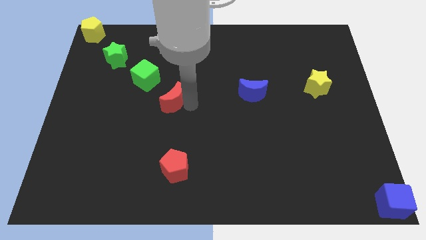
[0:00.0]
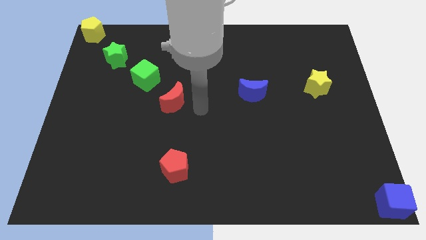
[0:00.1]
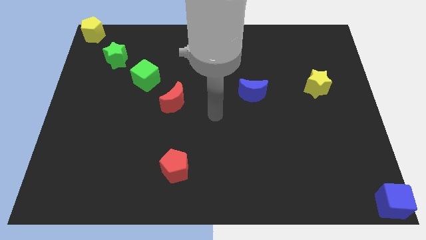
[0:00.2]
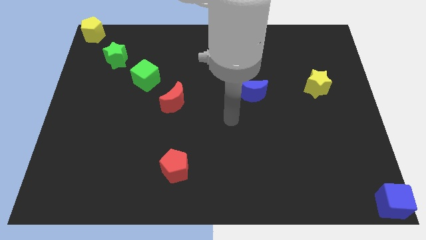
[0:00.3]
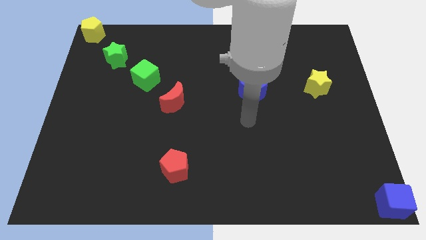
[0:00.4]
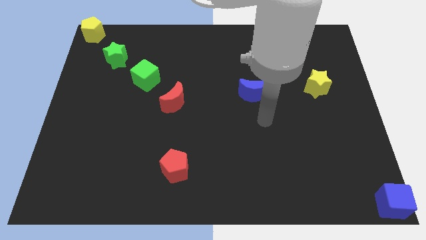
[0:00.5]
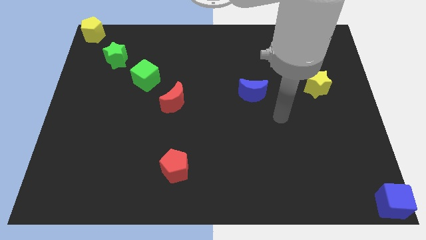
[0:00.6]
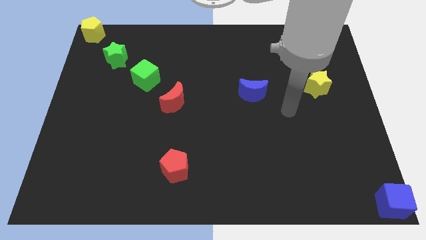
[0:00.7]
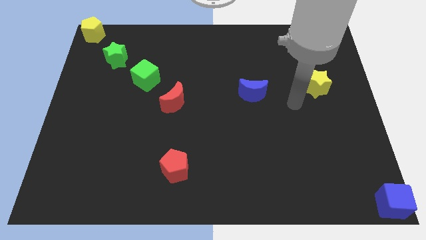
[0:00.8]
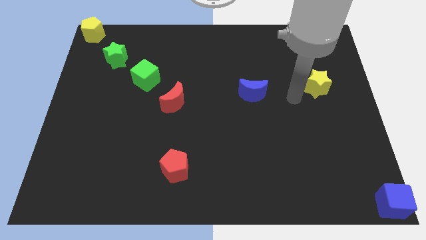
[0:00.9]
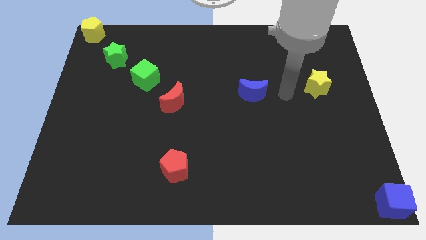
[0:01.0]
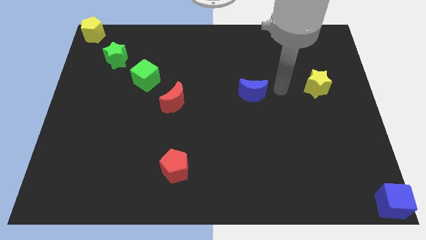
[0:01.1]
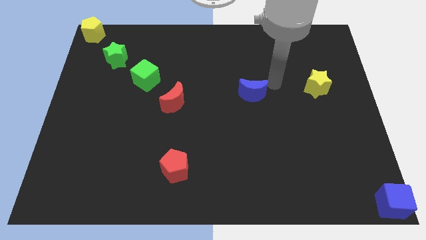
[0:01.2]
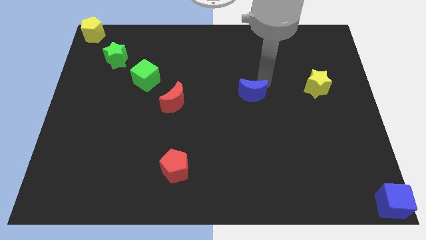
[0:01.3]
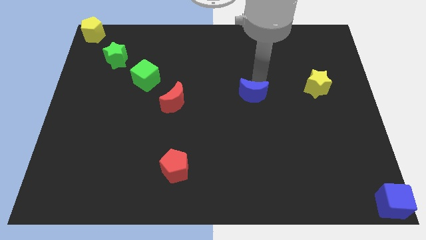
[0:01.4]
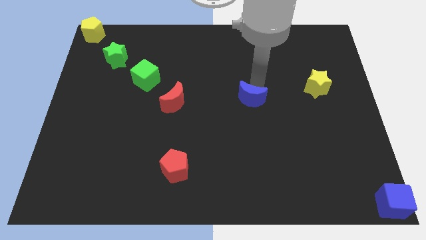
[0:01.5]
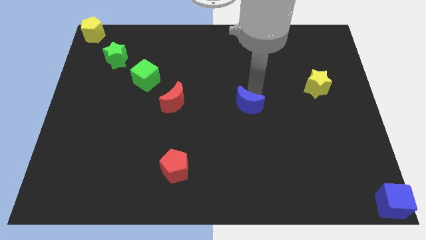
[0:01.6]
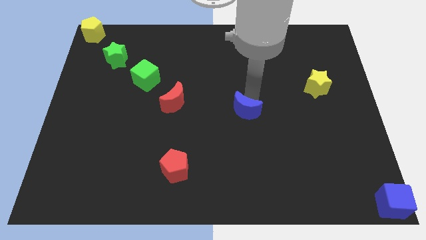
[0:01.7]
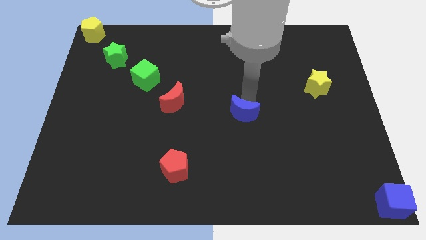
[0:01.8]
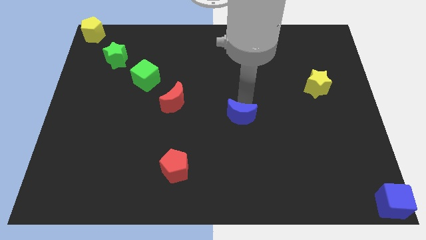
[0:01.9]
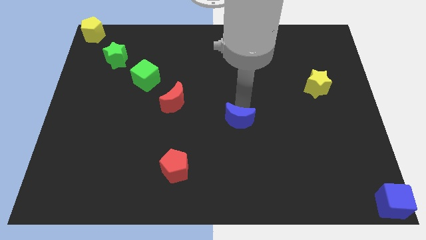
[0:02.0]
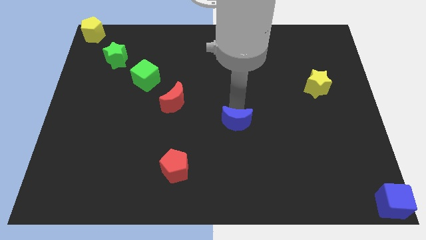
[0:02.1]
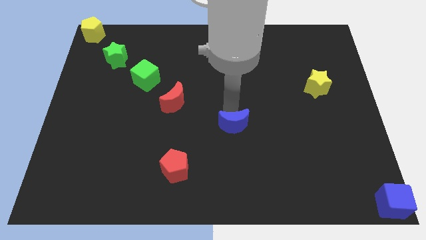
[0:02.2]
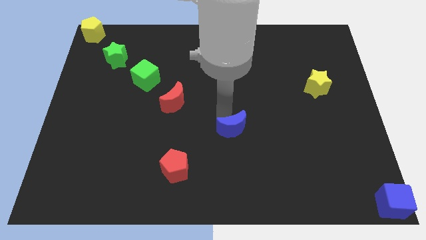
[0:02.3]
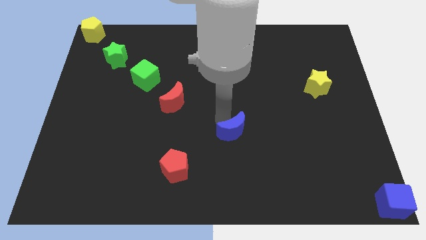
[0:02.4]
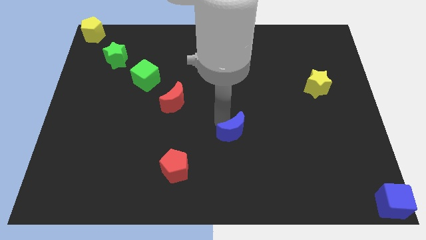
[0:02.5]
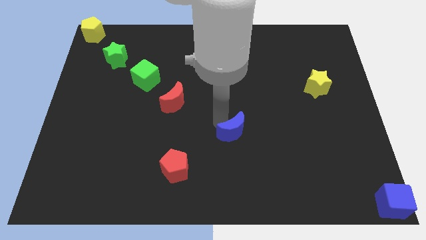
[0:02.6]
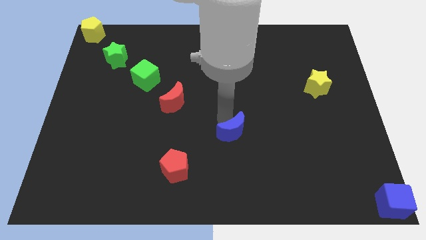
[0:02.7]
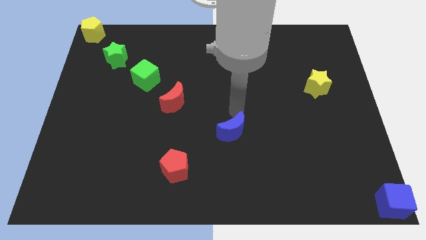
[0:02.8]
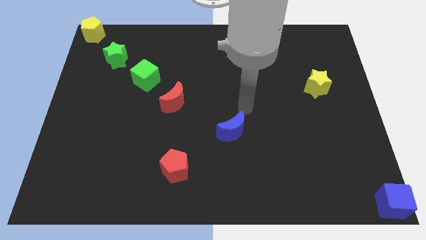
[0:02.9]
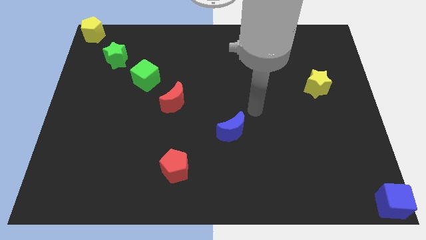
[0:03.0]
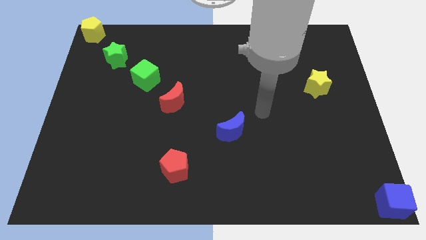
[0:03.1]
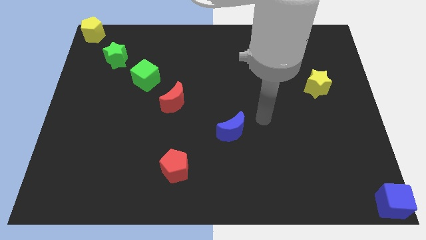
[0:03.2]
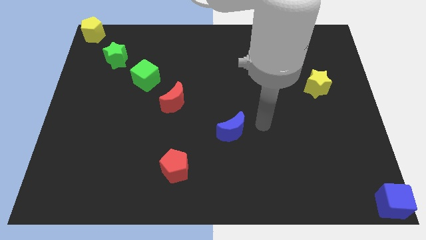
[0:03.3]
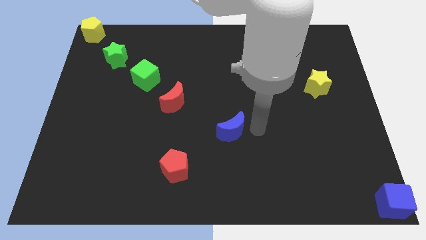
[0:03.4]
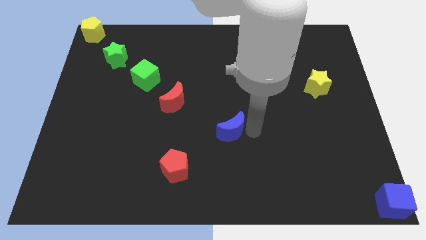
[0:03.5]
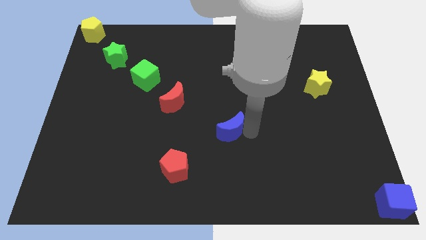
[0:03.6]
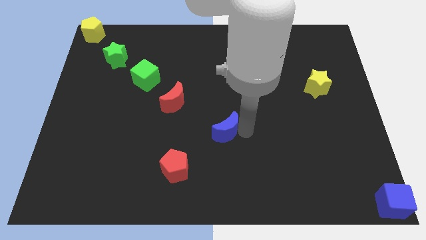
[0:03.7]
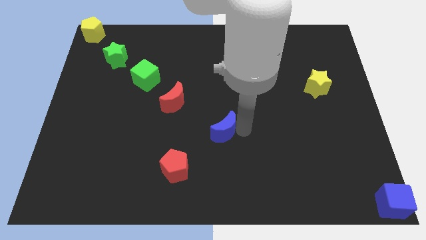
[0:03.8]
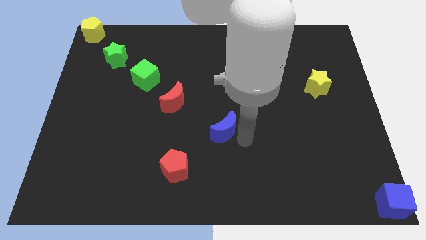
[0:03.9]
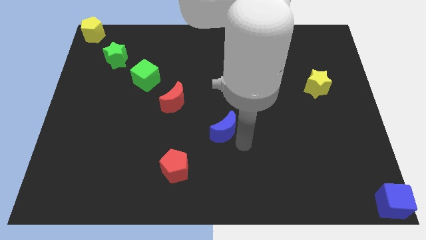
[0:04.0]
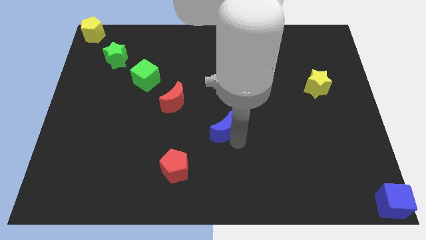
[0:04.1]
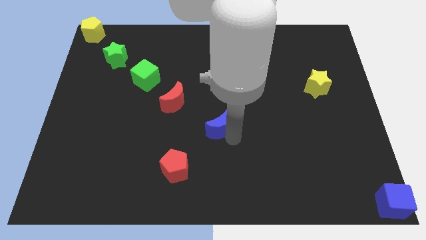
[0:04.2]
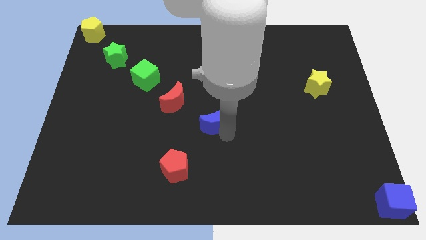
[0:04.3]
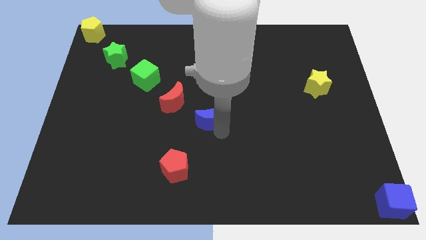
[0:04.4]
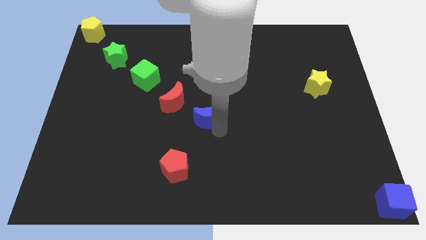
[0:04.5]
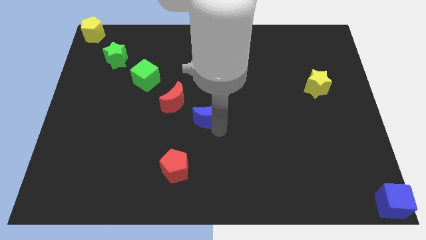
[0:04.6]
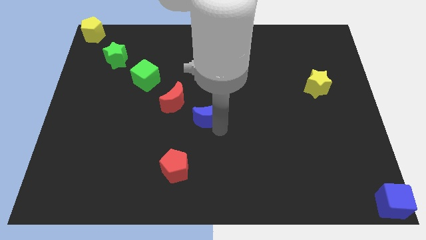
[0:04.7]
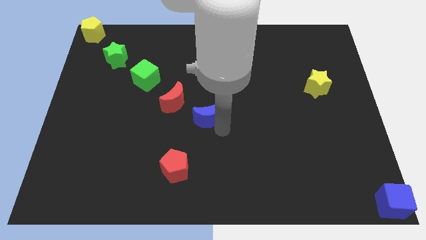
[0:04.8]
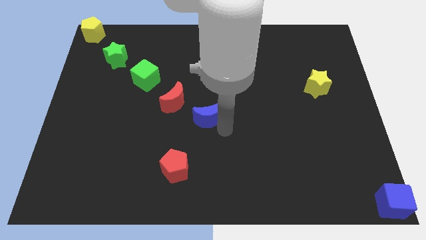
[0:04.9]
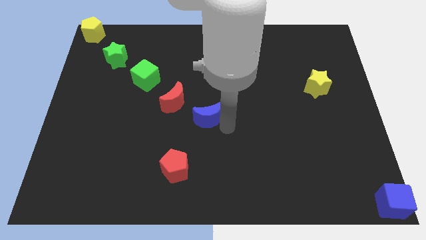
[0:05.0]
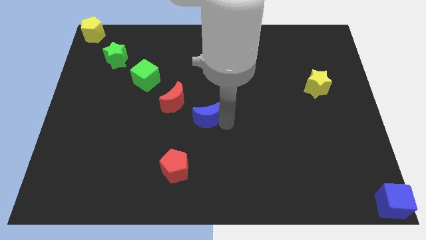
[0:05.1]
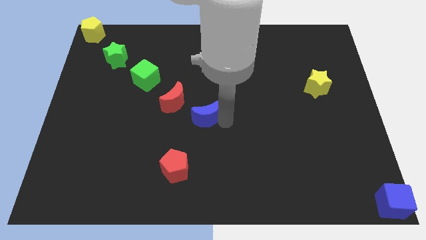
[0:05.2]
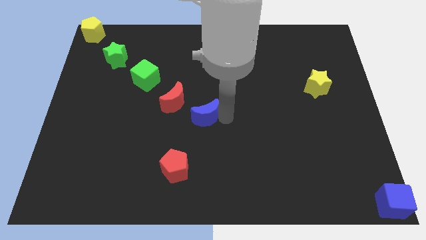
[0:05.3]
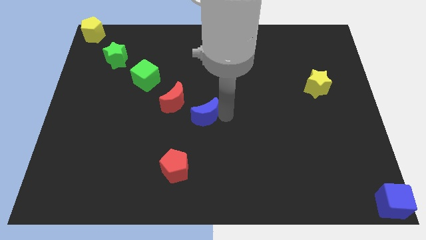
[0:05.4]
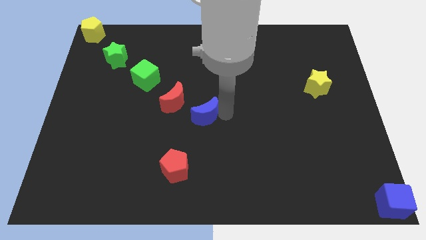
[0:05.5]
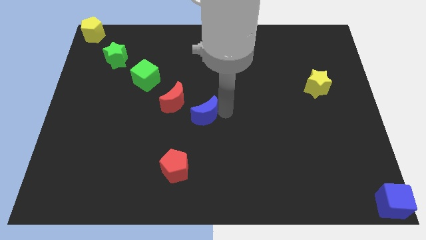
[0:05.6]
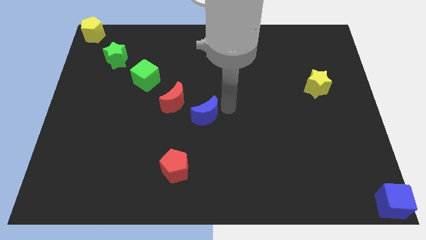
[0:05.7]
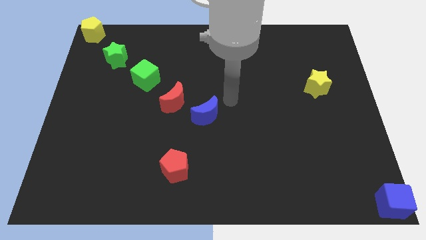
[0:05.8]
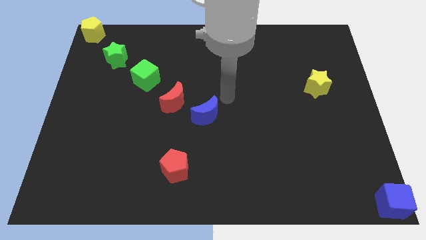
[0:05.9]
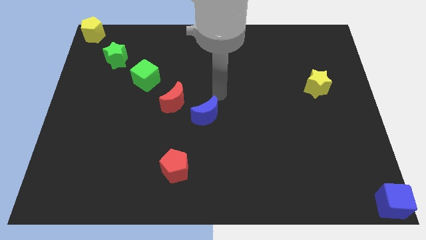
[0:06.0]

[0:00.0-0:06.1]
place blue moon right to red moon

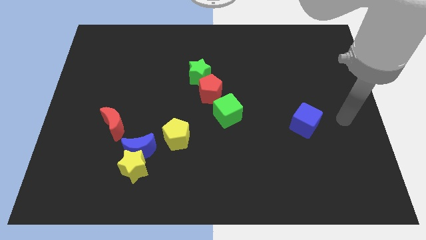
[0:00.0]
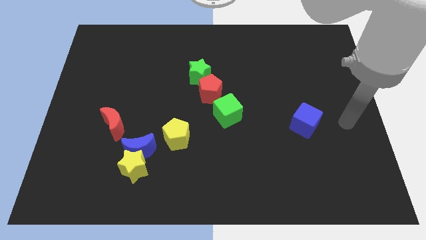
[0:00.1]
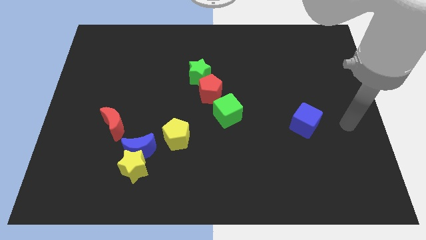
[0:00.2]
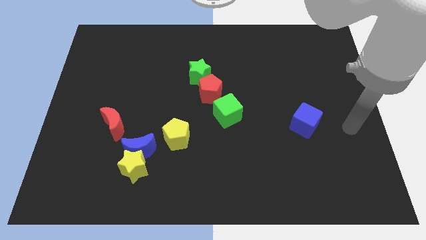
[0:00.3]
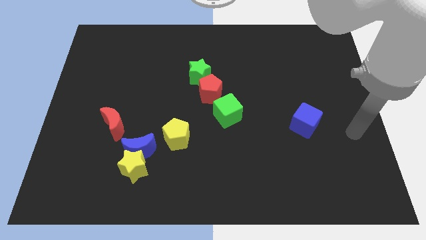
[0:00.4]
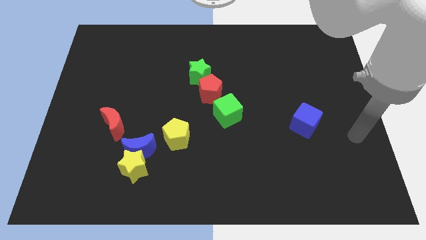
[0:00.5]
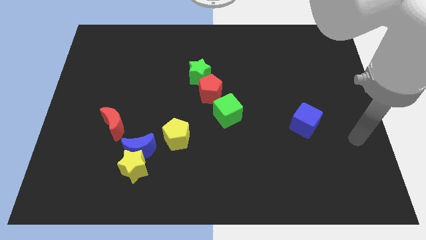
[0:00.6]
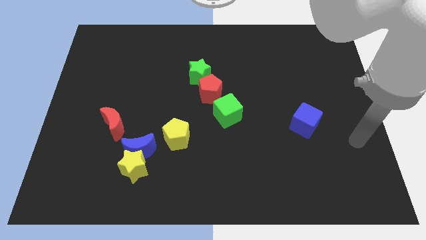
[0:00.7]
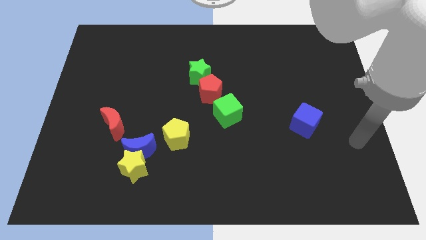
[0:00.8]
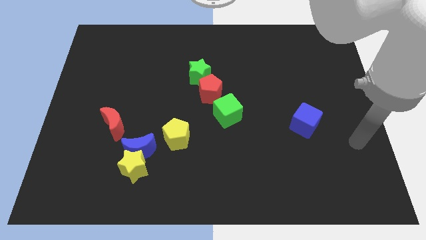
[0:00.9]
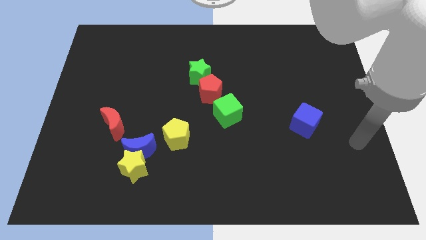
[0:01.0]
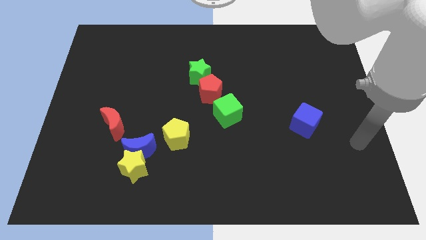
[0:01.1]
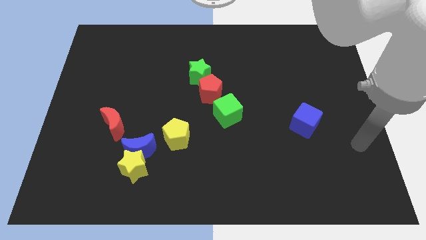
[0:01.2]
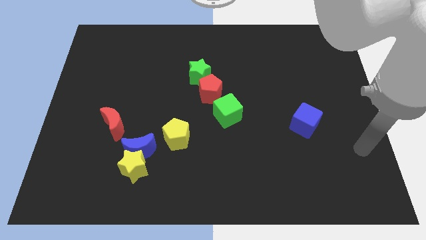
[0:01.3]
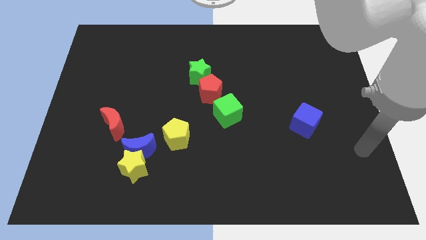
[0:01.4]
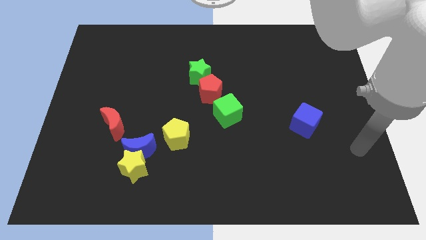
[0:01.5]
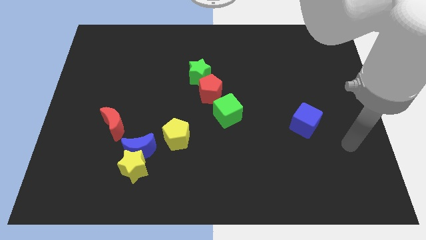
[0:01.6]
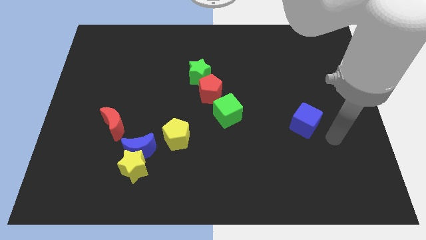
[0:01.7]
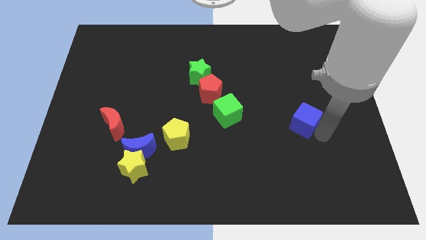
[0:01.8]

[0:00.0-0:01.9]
move your arm towards the blue cube

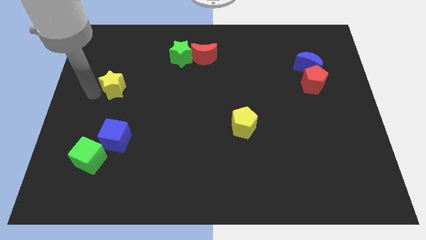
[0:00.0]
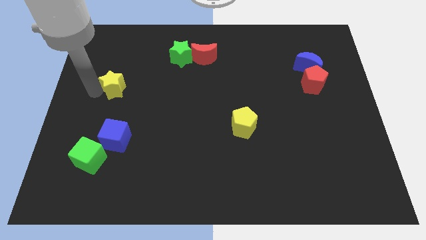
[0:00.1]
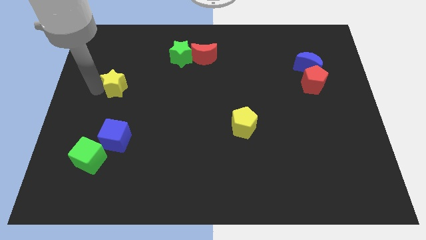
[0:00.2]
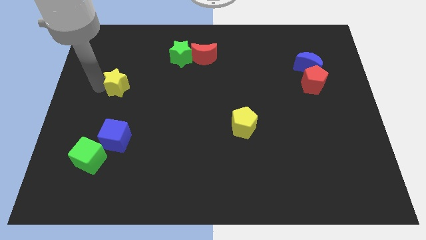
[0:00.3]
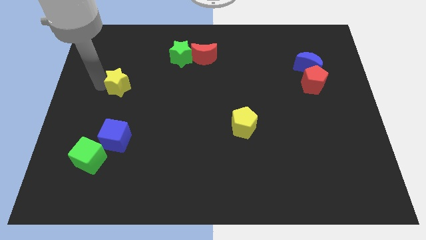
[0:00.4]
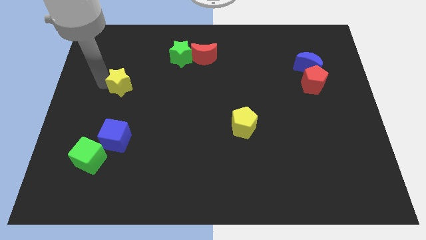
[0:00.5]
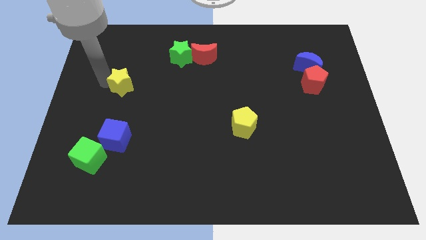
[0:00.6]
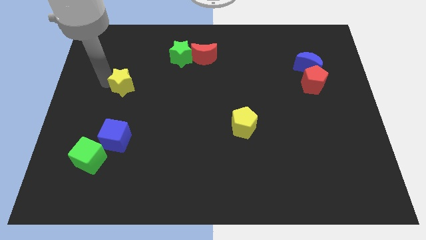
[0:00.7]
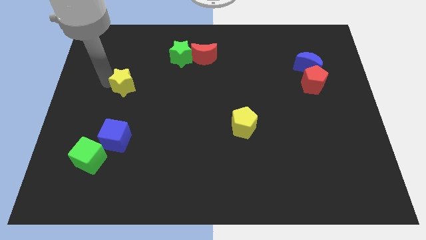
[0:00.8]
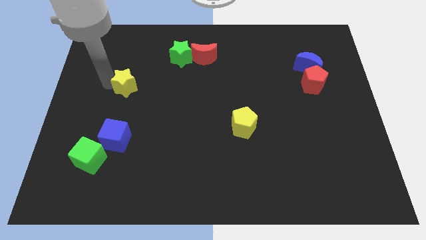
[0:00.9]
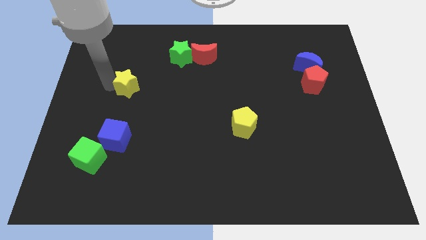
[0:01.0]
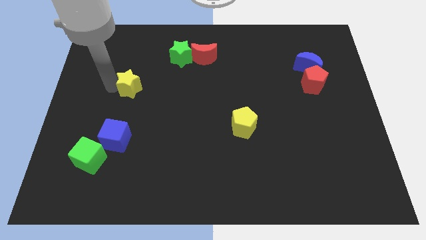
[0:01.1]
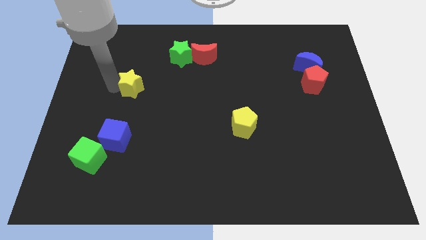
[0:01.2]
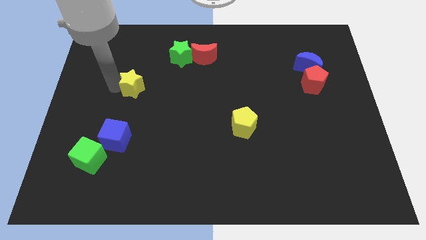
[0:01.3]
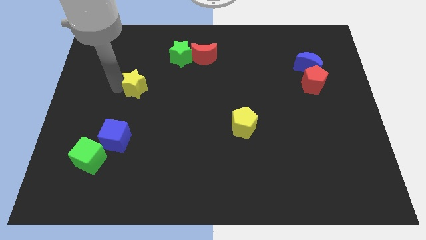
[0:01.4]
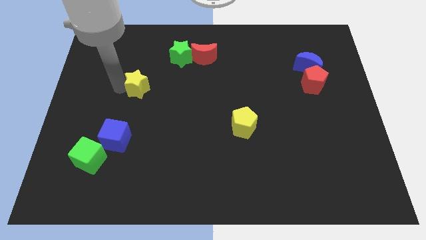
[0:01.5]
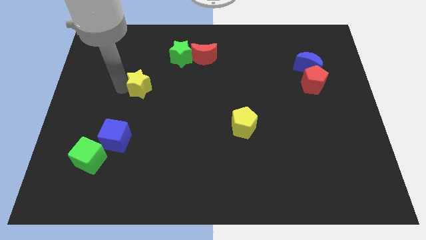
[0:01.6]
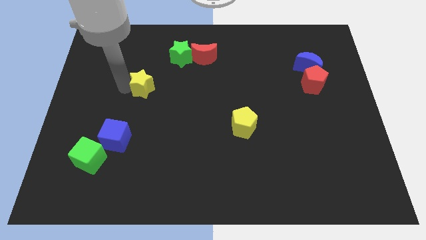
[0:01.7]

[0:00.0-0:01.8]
push the yellow star slightly to the right
